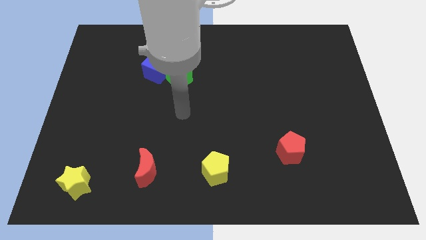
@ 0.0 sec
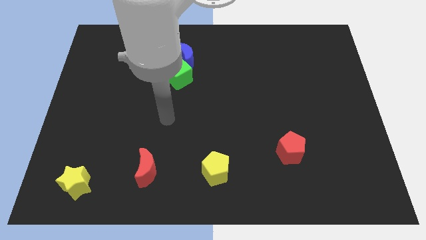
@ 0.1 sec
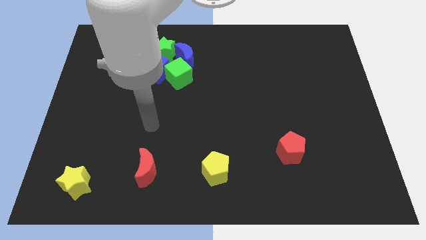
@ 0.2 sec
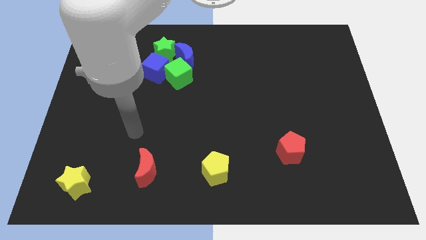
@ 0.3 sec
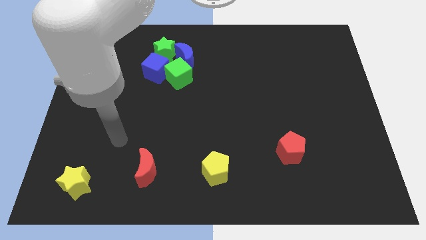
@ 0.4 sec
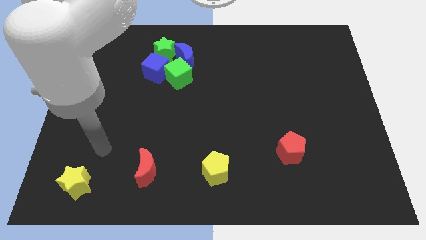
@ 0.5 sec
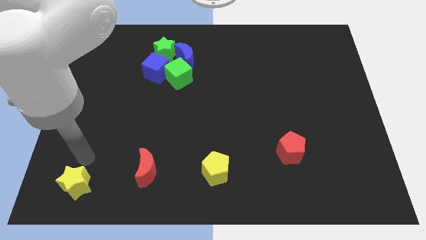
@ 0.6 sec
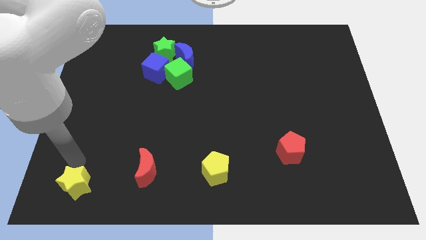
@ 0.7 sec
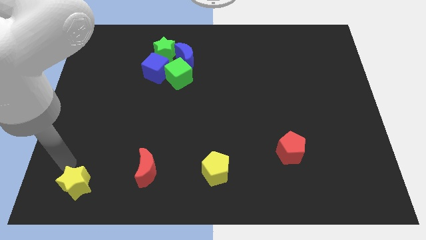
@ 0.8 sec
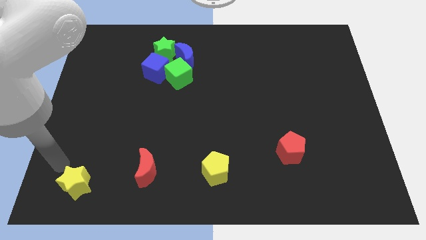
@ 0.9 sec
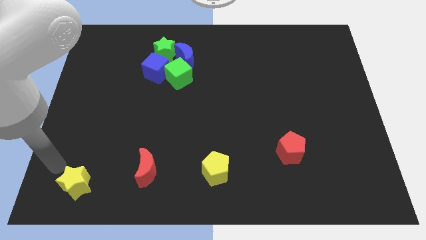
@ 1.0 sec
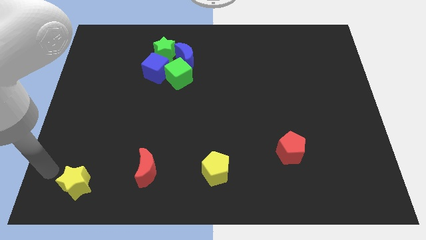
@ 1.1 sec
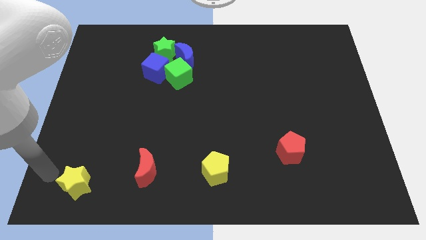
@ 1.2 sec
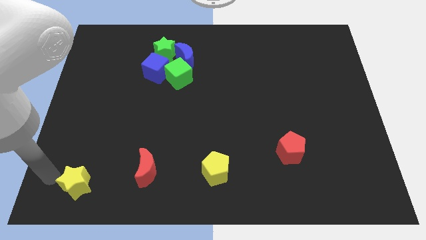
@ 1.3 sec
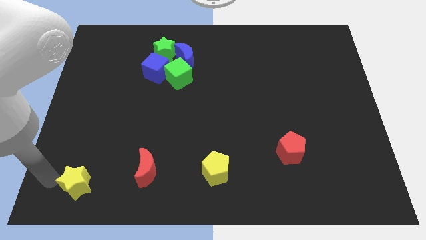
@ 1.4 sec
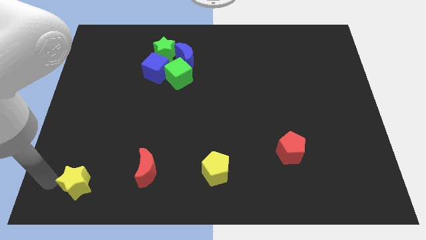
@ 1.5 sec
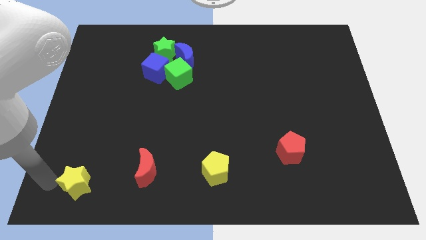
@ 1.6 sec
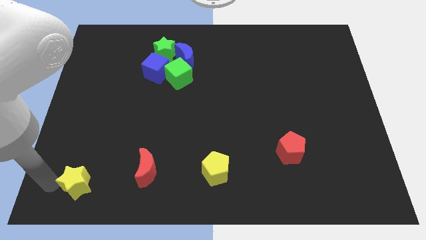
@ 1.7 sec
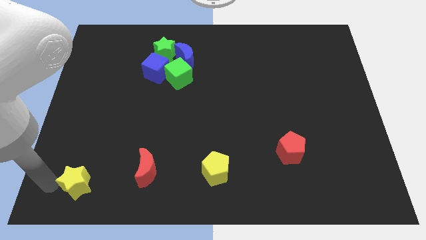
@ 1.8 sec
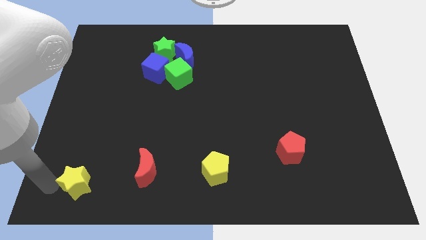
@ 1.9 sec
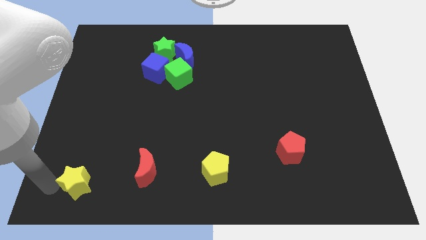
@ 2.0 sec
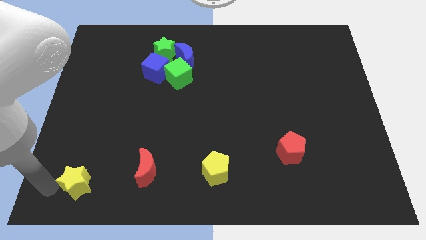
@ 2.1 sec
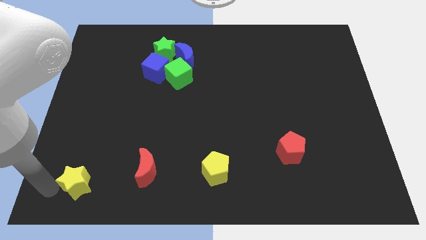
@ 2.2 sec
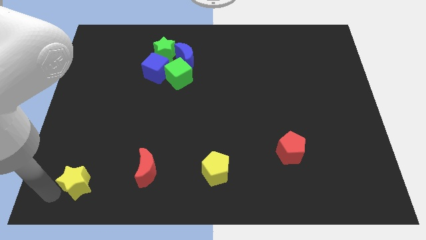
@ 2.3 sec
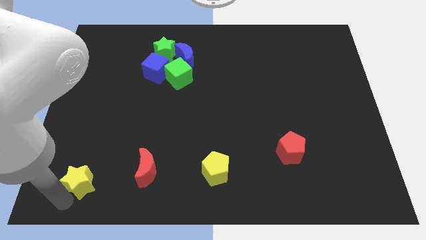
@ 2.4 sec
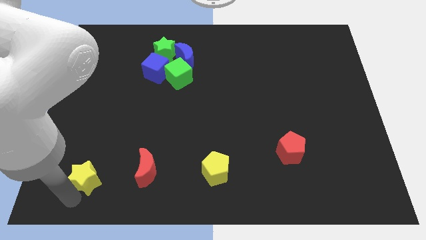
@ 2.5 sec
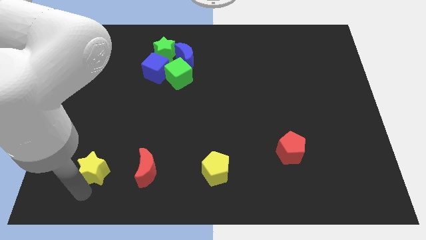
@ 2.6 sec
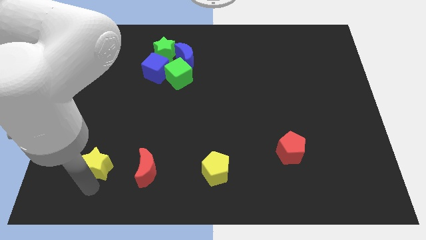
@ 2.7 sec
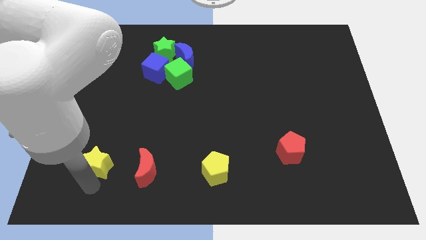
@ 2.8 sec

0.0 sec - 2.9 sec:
place yellow star beside red crescent

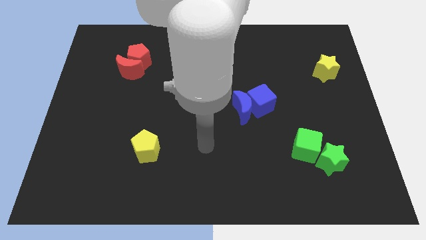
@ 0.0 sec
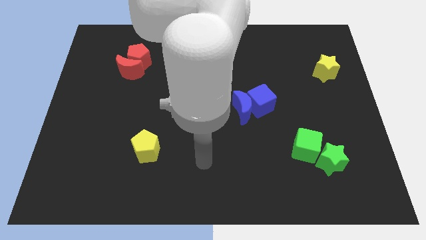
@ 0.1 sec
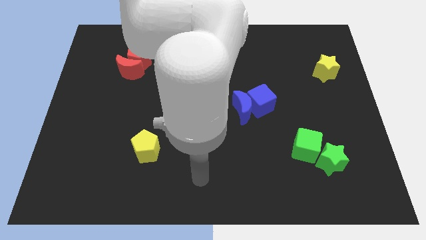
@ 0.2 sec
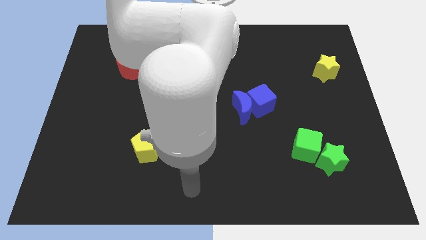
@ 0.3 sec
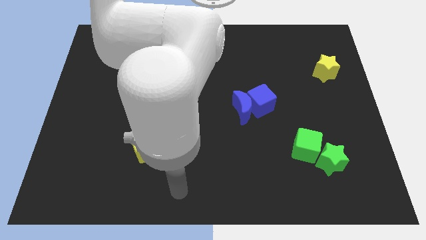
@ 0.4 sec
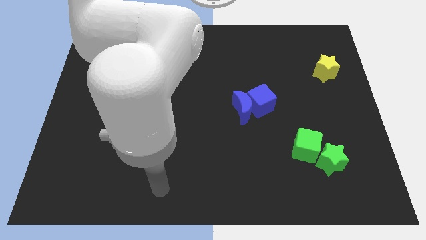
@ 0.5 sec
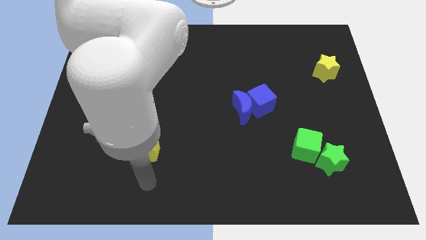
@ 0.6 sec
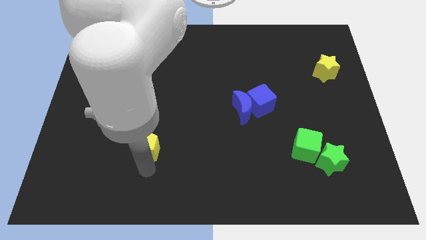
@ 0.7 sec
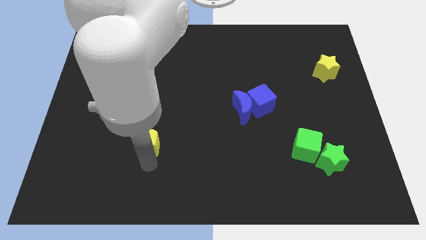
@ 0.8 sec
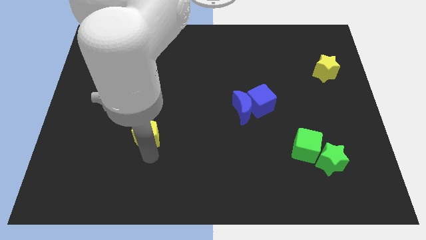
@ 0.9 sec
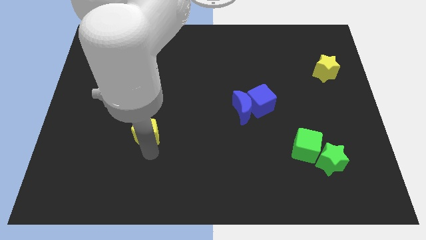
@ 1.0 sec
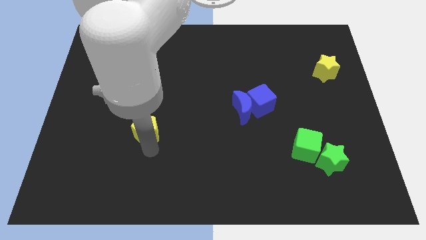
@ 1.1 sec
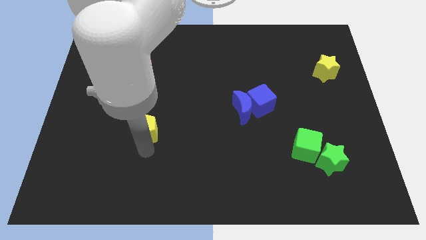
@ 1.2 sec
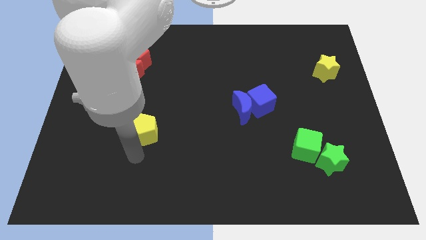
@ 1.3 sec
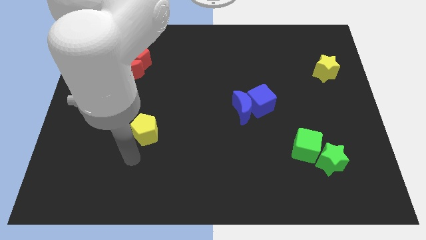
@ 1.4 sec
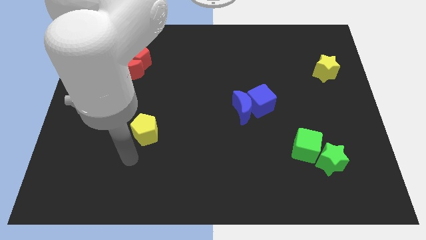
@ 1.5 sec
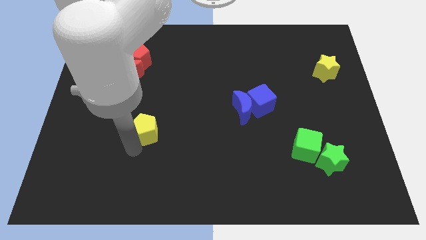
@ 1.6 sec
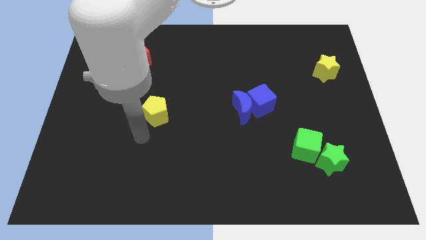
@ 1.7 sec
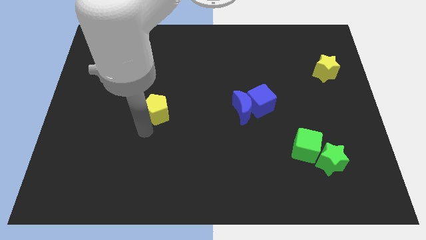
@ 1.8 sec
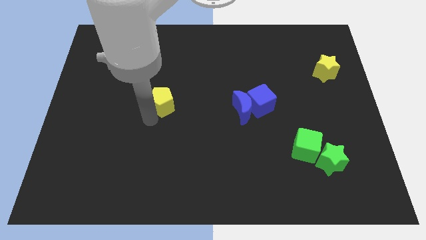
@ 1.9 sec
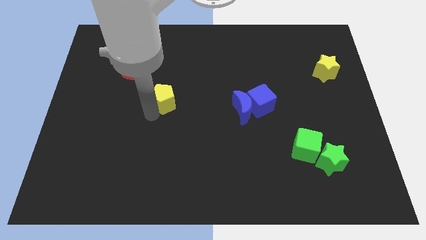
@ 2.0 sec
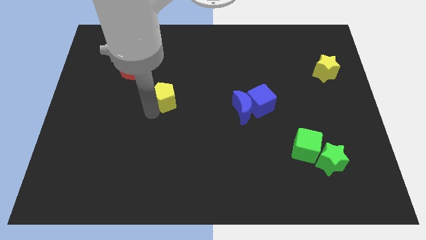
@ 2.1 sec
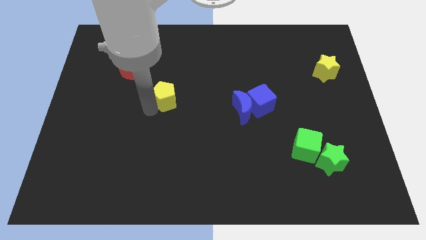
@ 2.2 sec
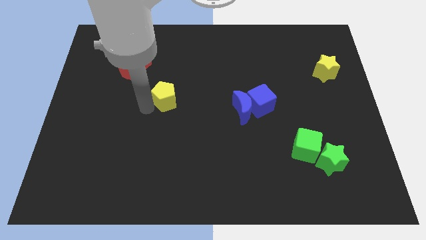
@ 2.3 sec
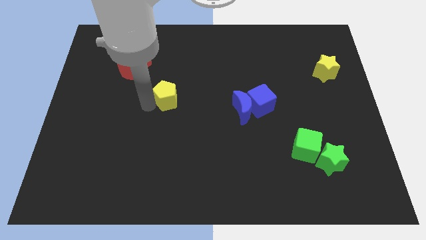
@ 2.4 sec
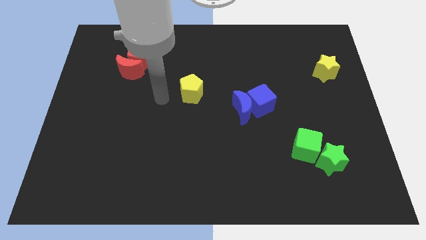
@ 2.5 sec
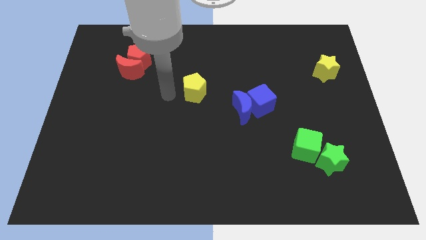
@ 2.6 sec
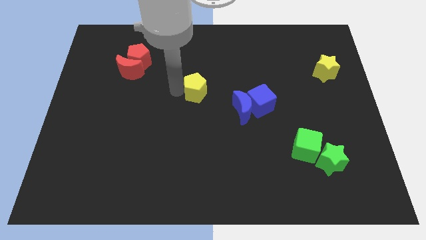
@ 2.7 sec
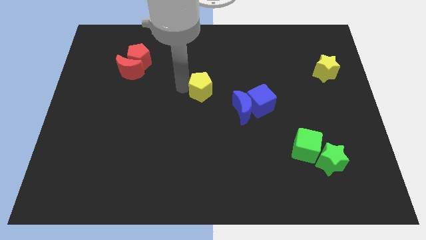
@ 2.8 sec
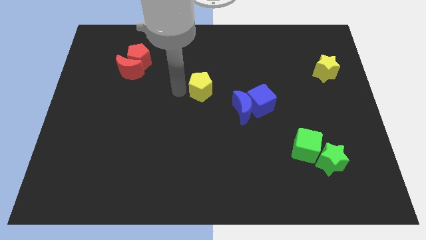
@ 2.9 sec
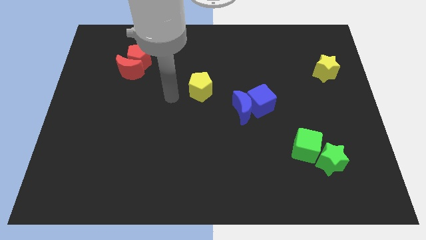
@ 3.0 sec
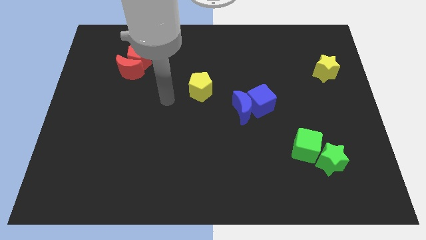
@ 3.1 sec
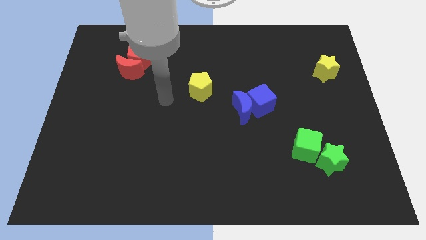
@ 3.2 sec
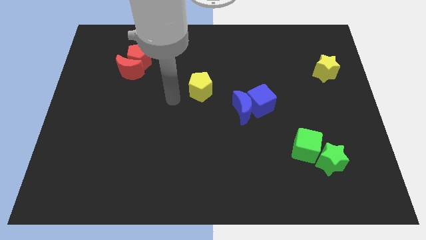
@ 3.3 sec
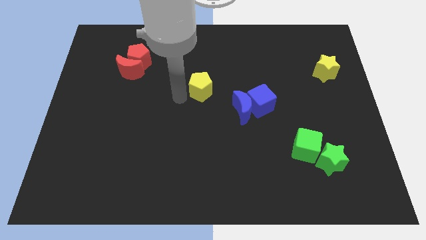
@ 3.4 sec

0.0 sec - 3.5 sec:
put the yellow pentagon diagonally top left to the blue moon

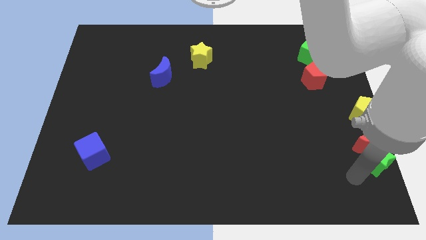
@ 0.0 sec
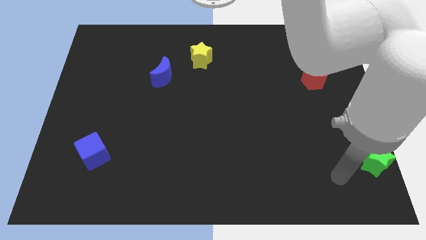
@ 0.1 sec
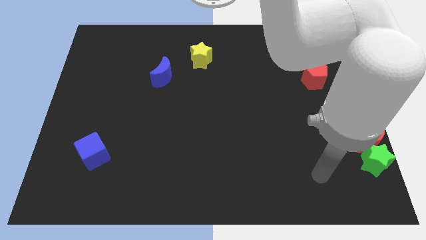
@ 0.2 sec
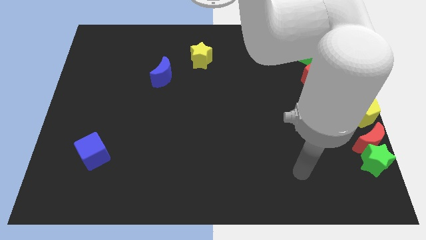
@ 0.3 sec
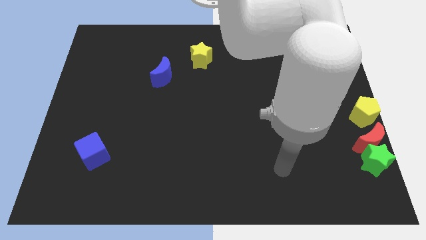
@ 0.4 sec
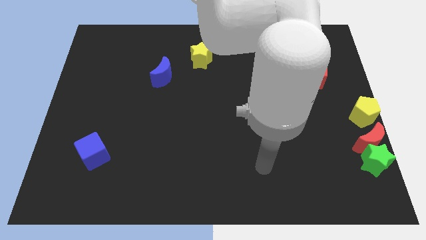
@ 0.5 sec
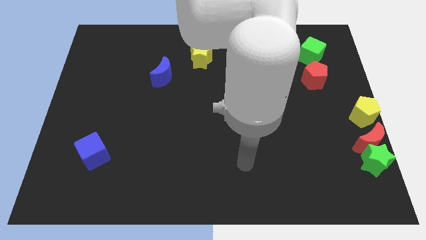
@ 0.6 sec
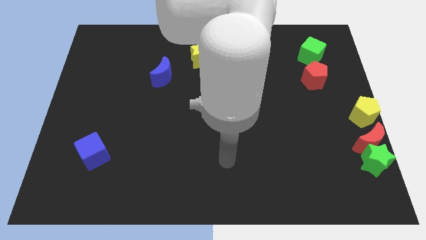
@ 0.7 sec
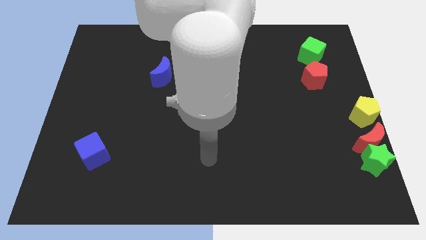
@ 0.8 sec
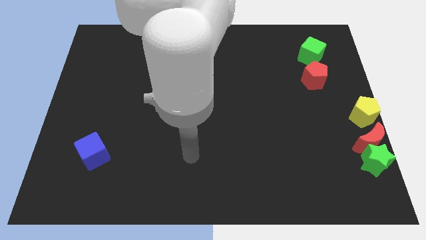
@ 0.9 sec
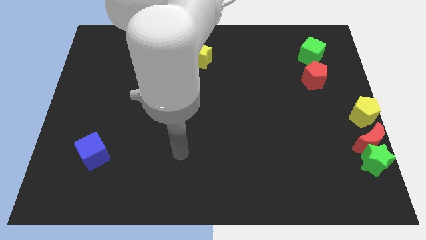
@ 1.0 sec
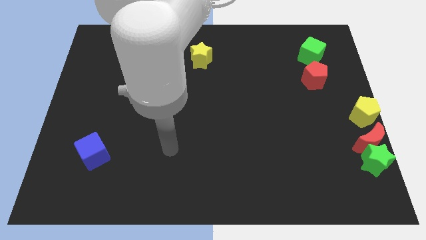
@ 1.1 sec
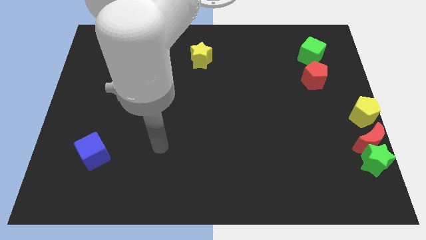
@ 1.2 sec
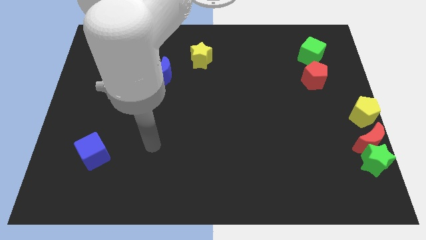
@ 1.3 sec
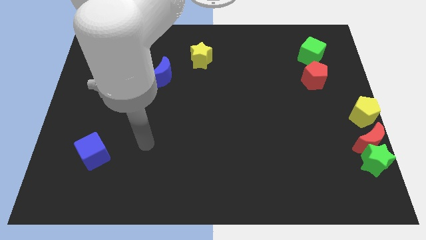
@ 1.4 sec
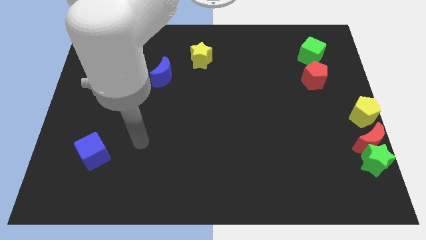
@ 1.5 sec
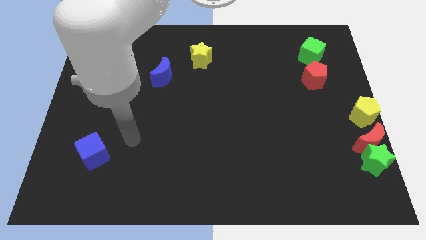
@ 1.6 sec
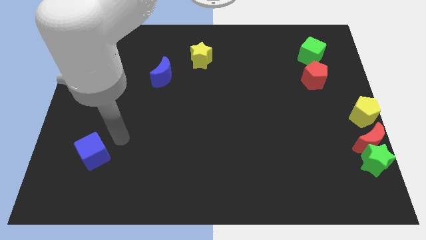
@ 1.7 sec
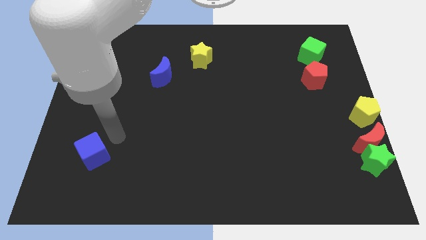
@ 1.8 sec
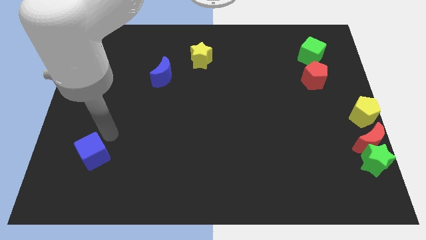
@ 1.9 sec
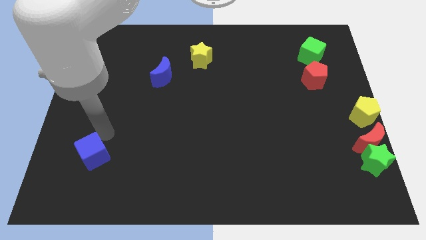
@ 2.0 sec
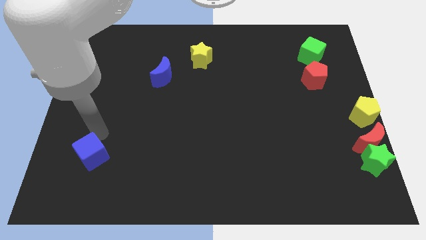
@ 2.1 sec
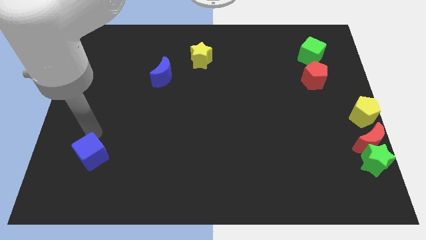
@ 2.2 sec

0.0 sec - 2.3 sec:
move the arm to the top of the blue cube
